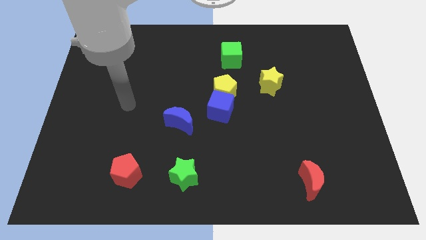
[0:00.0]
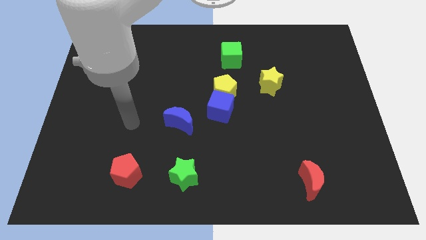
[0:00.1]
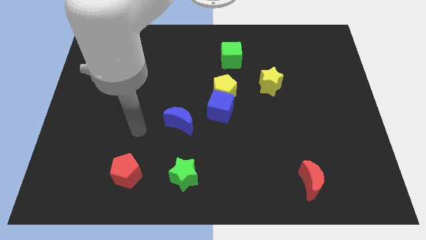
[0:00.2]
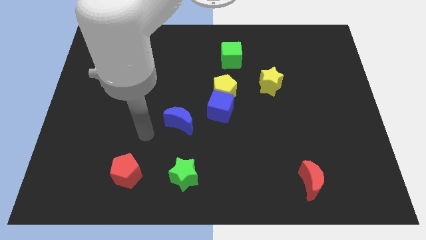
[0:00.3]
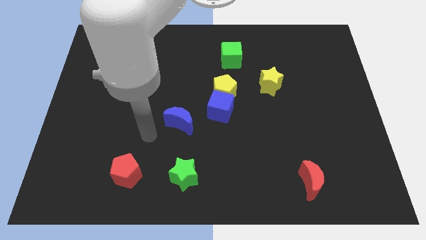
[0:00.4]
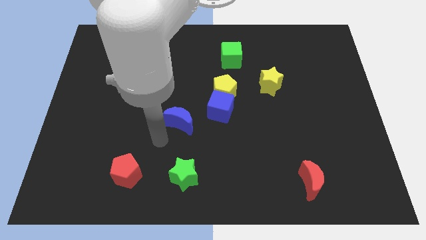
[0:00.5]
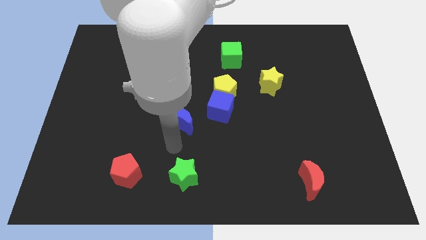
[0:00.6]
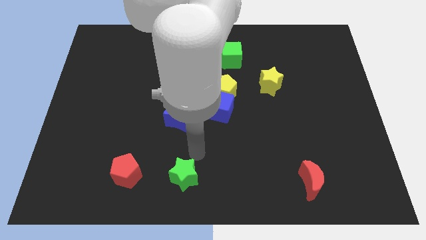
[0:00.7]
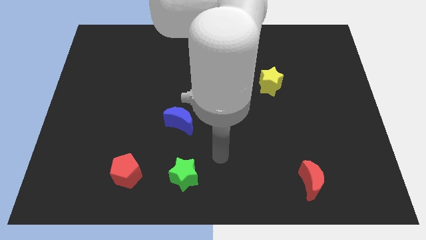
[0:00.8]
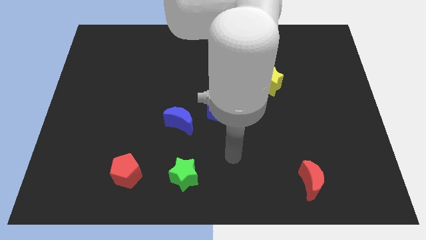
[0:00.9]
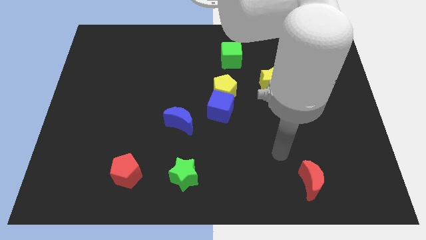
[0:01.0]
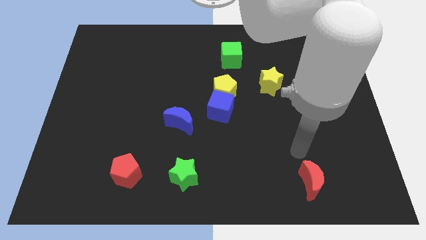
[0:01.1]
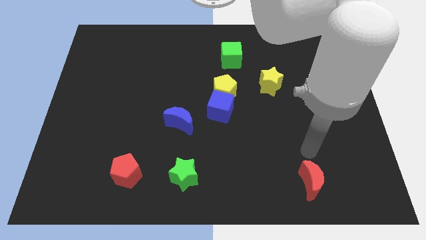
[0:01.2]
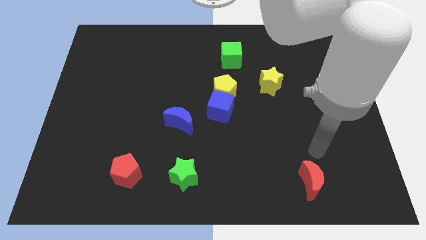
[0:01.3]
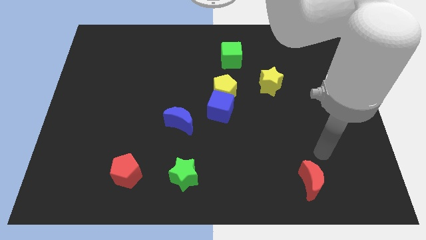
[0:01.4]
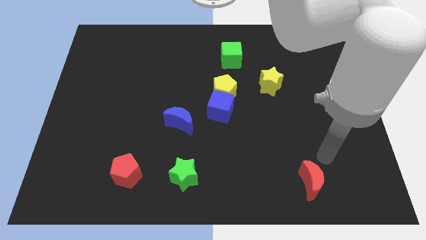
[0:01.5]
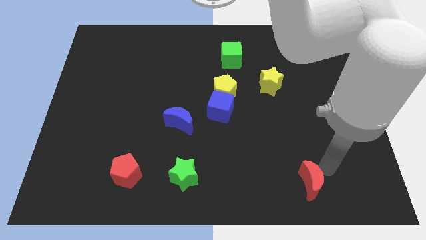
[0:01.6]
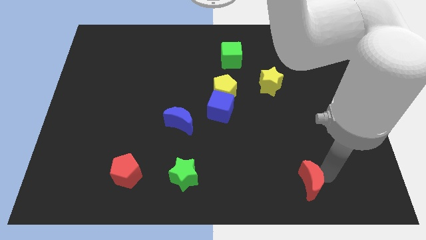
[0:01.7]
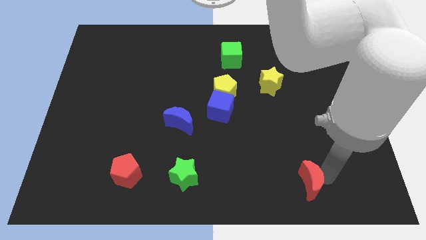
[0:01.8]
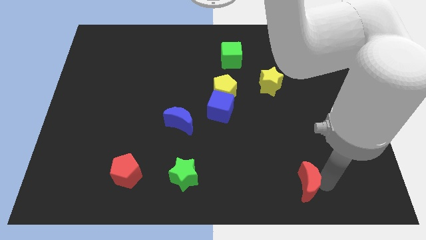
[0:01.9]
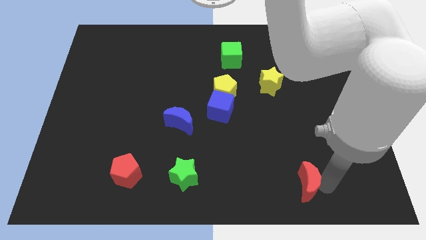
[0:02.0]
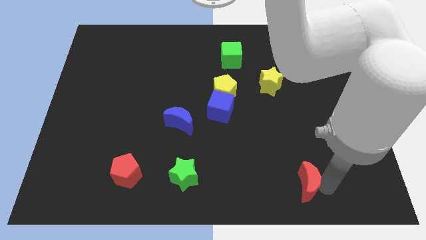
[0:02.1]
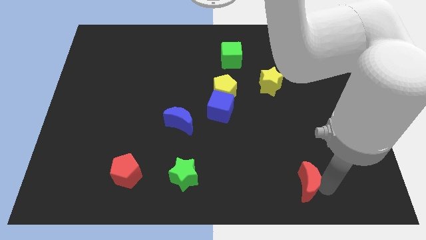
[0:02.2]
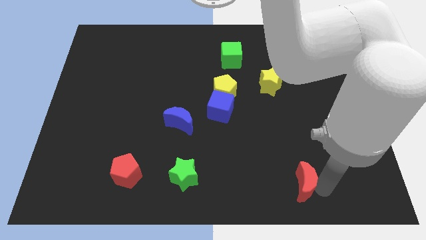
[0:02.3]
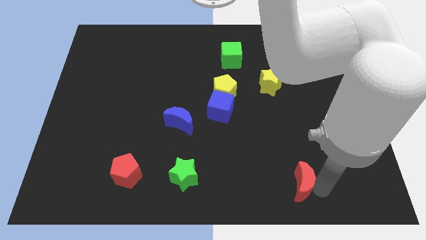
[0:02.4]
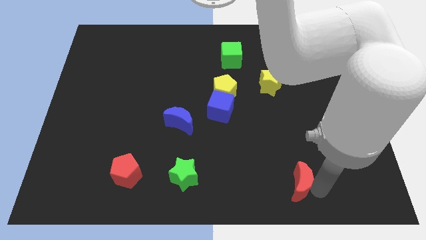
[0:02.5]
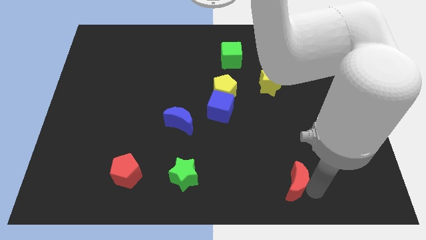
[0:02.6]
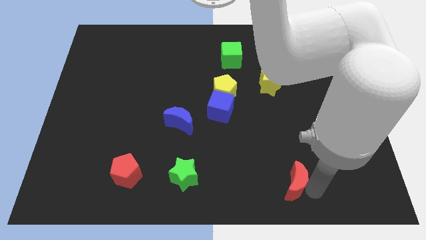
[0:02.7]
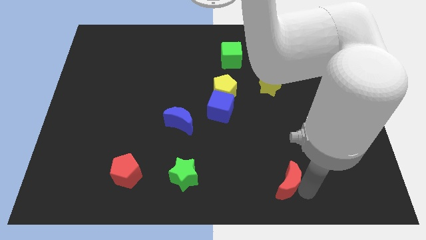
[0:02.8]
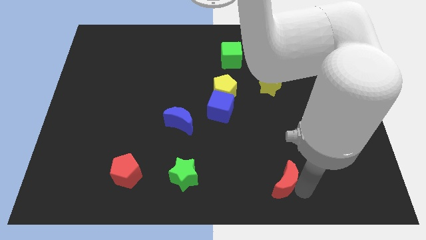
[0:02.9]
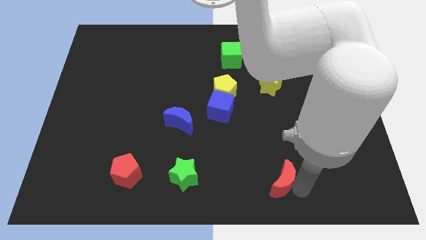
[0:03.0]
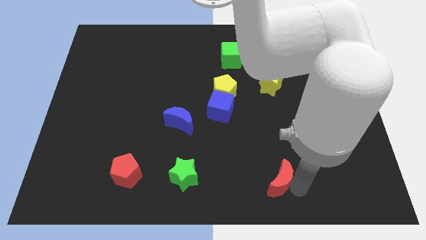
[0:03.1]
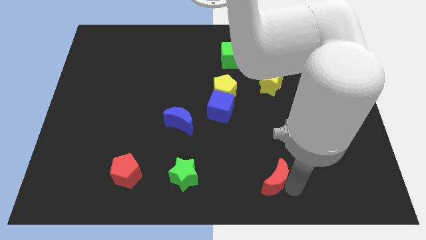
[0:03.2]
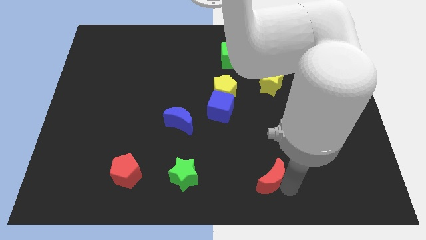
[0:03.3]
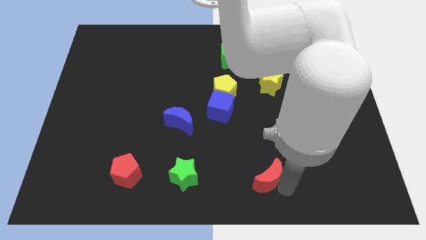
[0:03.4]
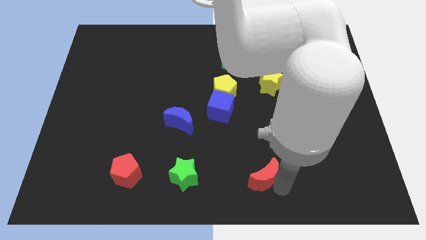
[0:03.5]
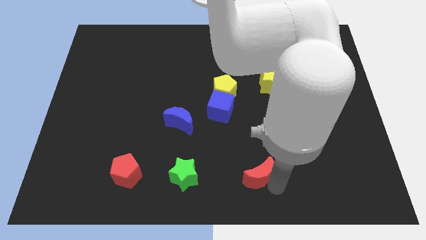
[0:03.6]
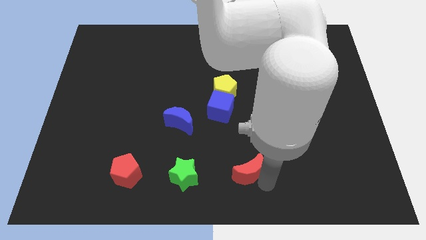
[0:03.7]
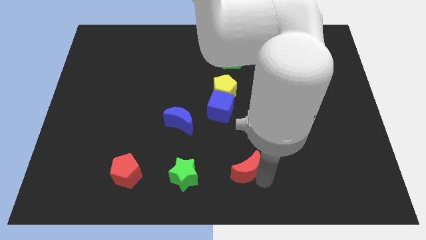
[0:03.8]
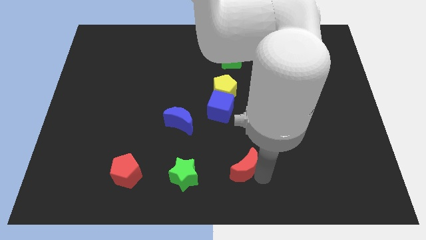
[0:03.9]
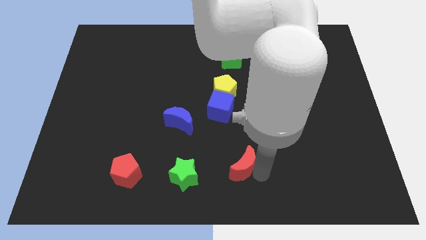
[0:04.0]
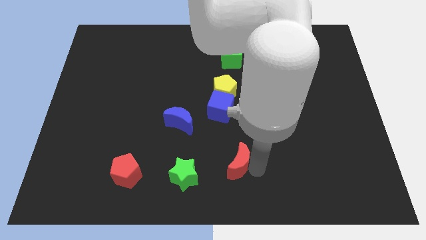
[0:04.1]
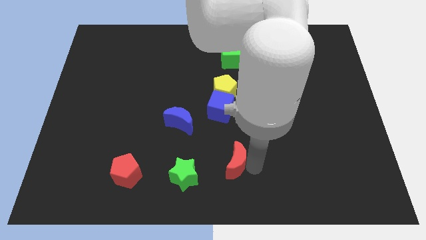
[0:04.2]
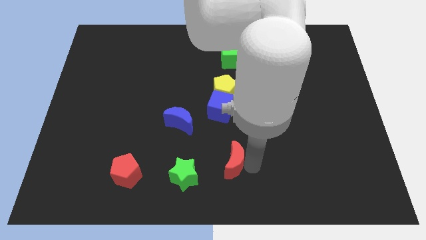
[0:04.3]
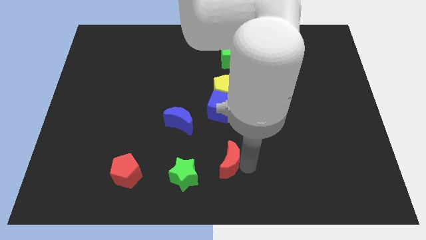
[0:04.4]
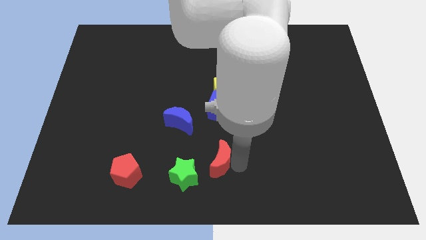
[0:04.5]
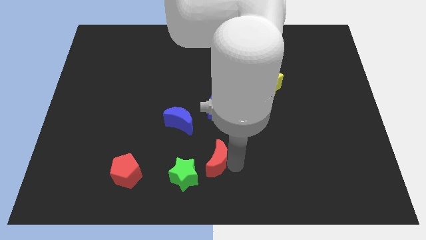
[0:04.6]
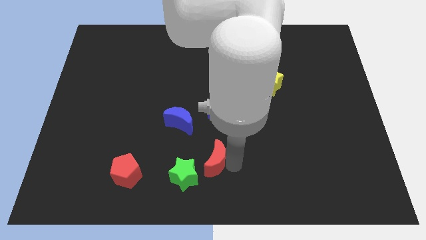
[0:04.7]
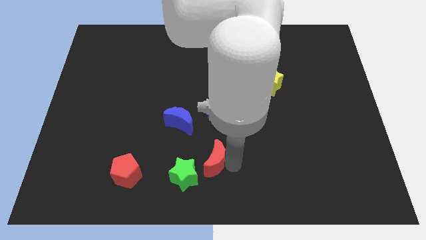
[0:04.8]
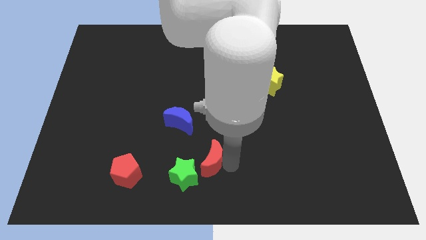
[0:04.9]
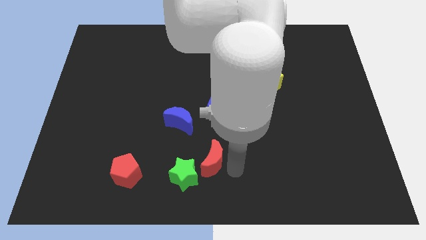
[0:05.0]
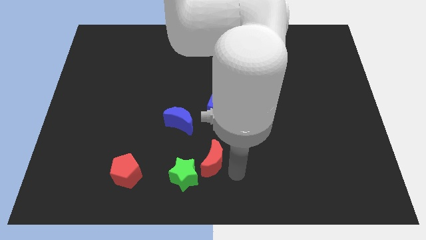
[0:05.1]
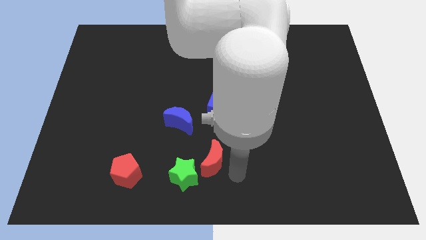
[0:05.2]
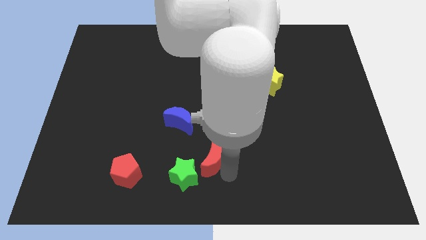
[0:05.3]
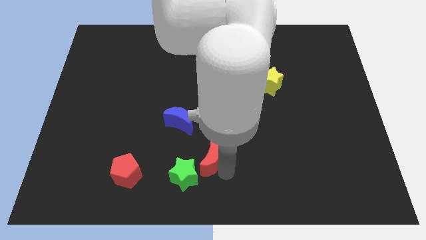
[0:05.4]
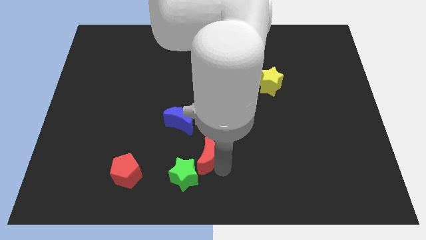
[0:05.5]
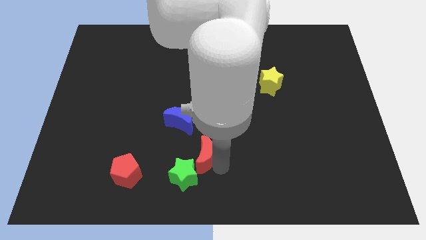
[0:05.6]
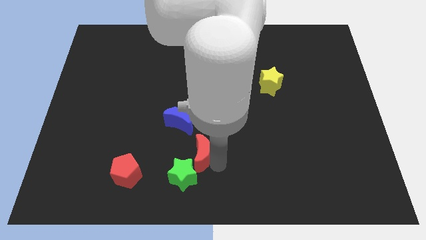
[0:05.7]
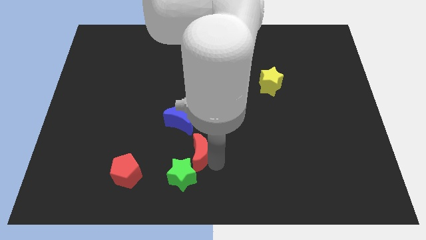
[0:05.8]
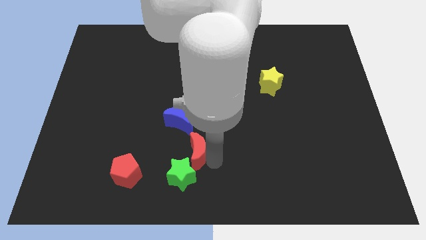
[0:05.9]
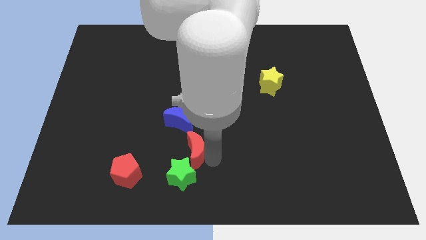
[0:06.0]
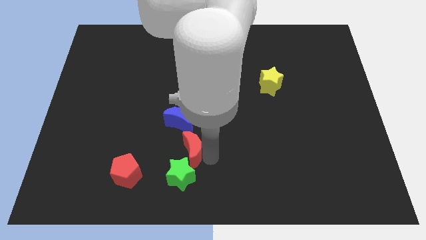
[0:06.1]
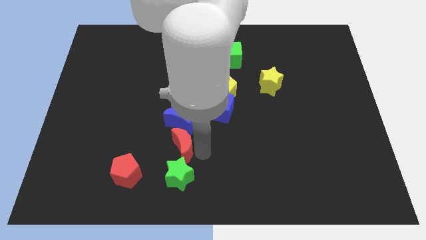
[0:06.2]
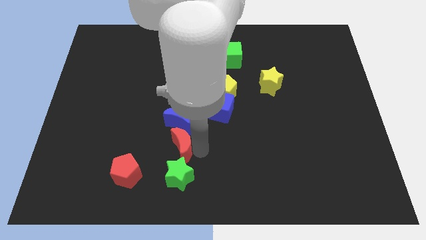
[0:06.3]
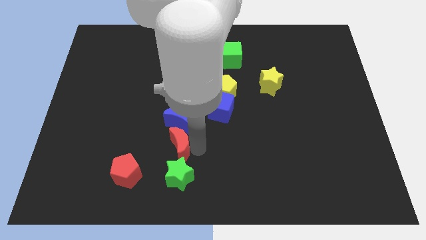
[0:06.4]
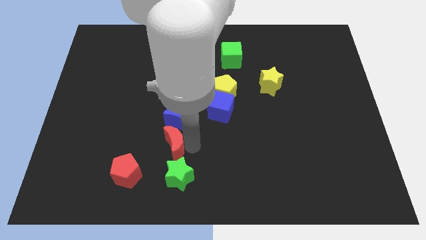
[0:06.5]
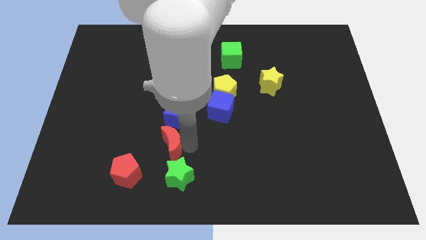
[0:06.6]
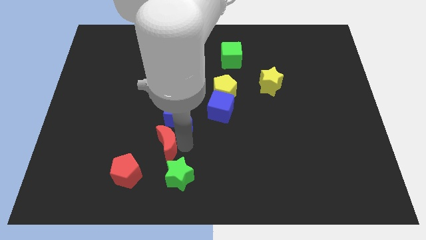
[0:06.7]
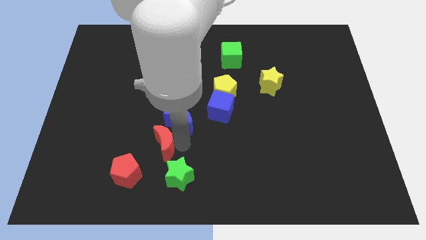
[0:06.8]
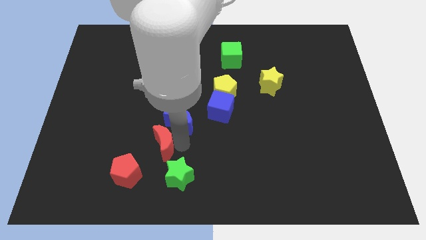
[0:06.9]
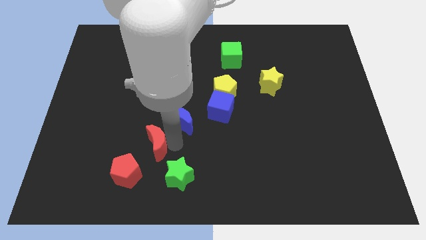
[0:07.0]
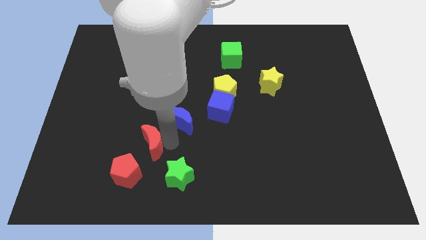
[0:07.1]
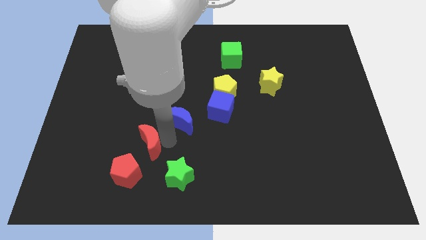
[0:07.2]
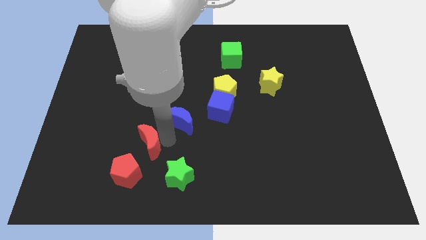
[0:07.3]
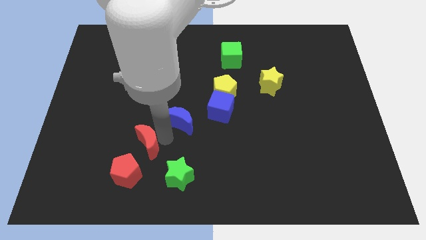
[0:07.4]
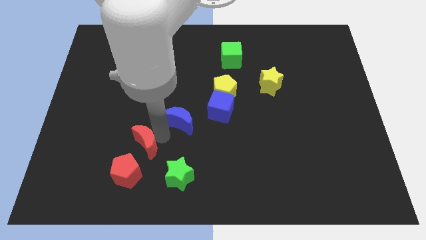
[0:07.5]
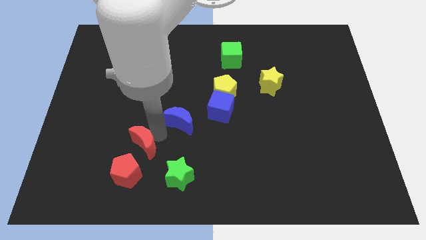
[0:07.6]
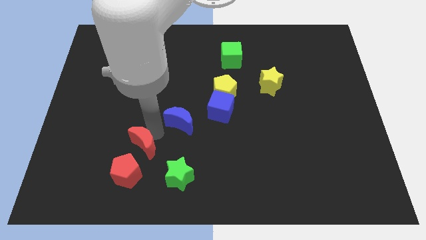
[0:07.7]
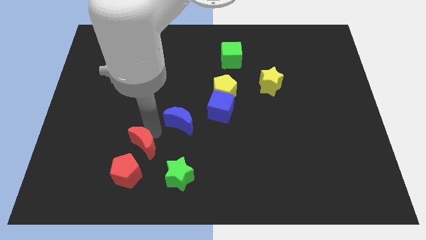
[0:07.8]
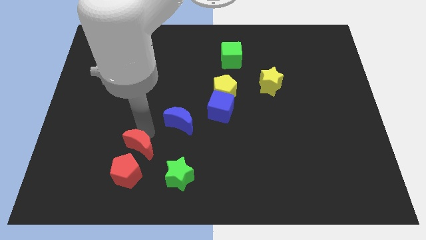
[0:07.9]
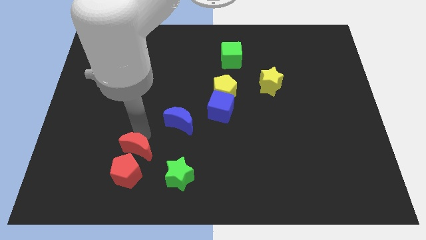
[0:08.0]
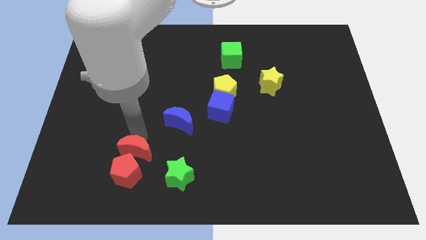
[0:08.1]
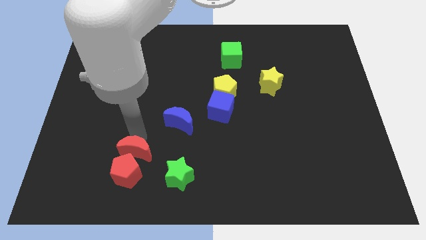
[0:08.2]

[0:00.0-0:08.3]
slide the red moon close to the red pentagon
